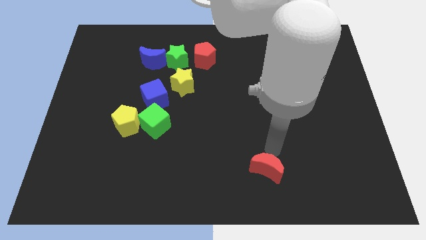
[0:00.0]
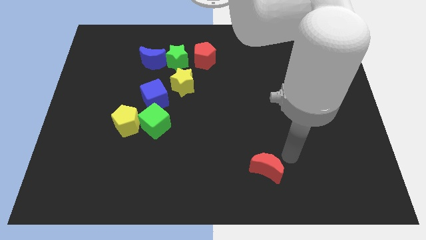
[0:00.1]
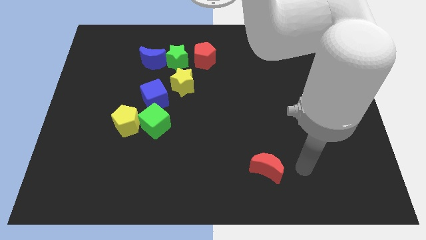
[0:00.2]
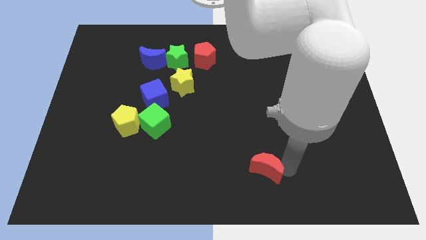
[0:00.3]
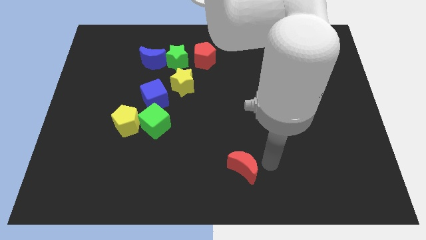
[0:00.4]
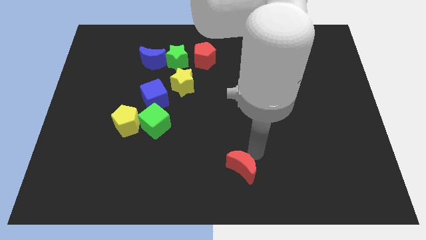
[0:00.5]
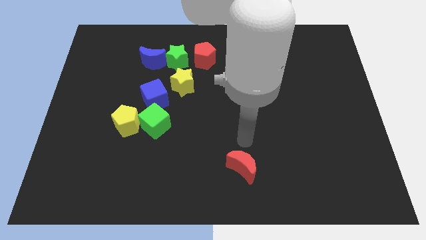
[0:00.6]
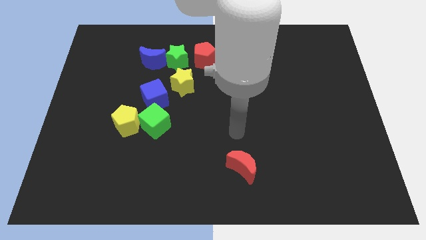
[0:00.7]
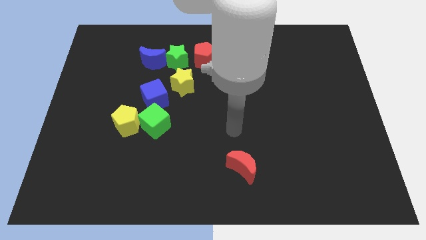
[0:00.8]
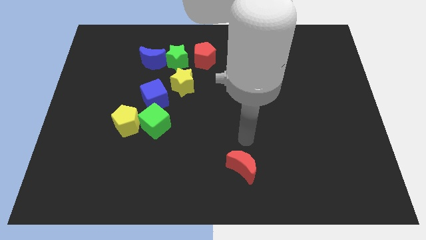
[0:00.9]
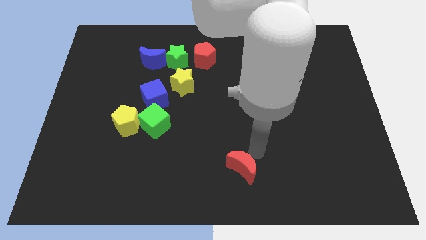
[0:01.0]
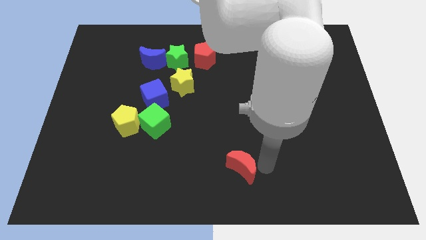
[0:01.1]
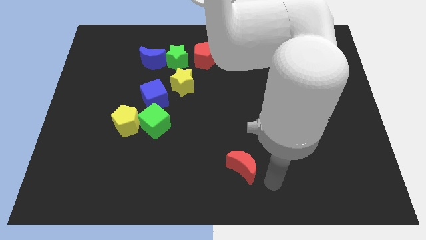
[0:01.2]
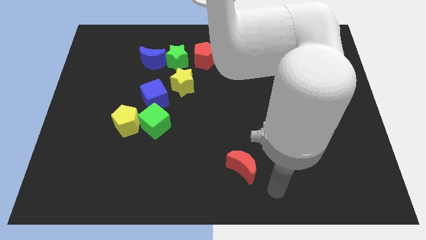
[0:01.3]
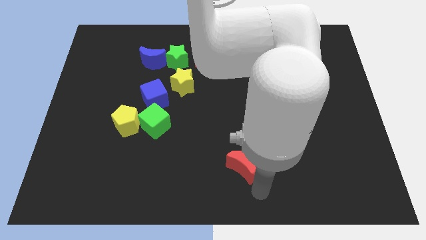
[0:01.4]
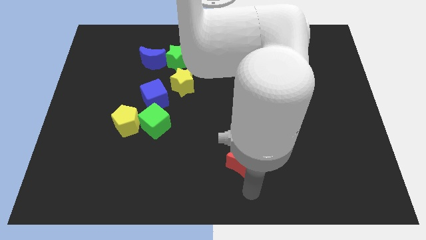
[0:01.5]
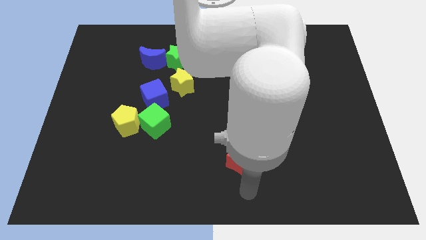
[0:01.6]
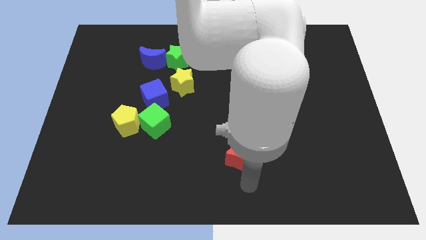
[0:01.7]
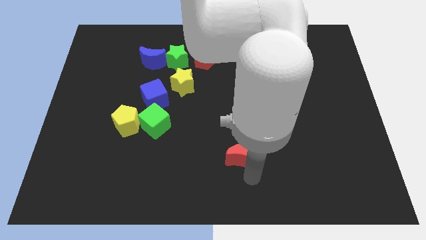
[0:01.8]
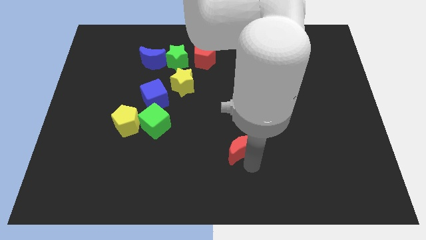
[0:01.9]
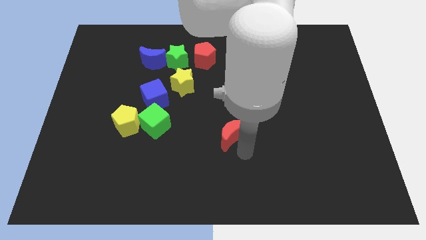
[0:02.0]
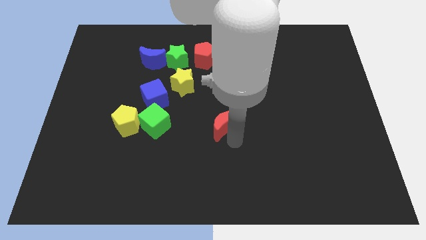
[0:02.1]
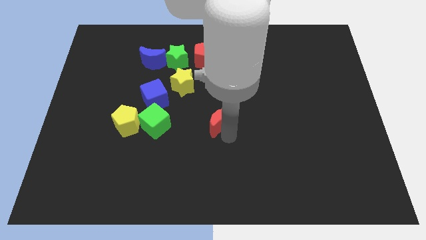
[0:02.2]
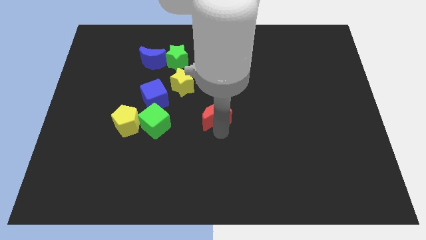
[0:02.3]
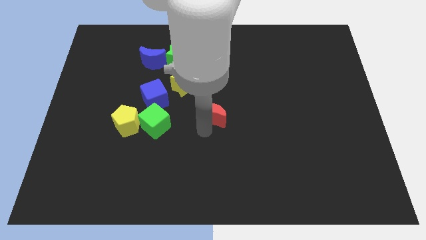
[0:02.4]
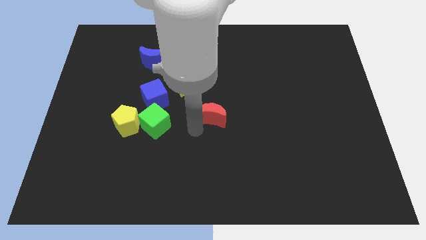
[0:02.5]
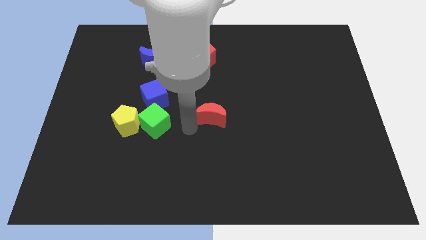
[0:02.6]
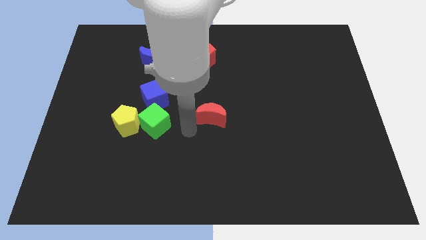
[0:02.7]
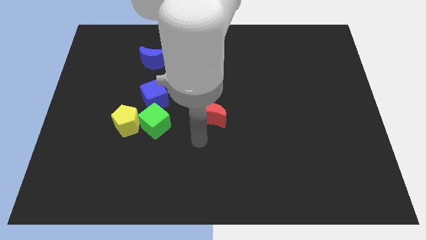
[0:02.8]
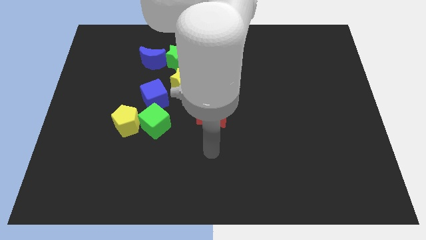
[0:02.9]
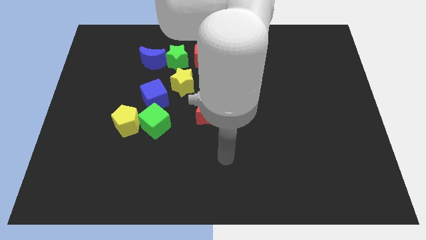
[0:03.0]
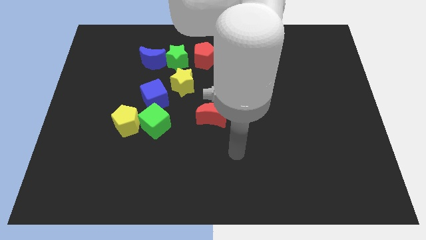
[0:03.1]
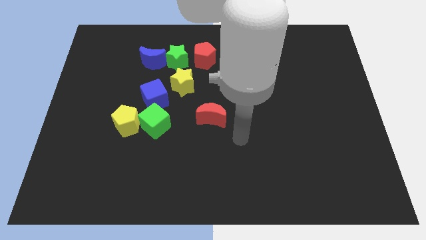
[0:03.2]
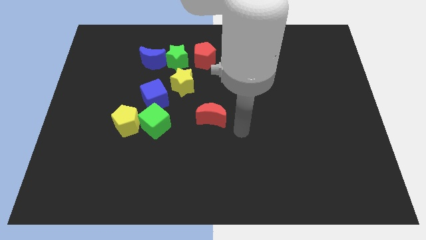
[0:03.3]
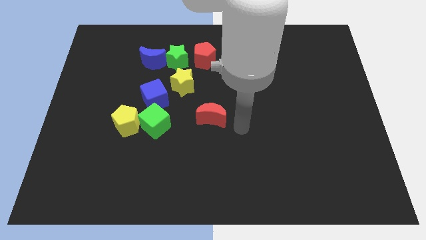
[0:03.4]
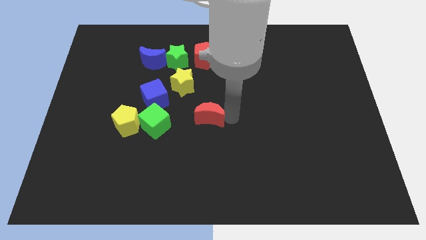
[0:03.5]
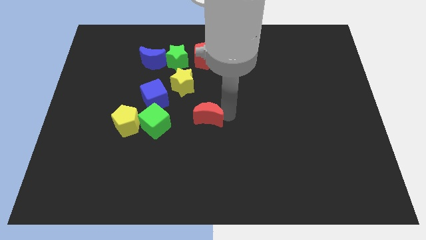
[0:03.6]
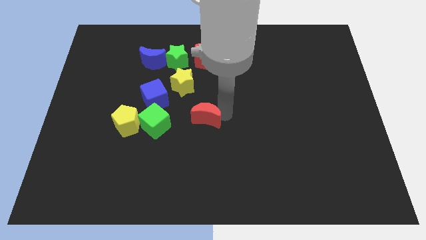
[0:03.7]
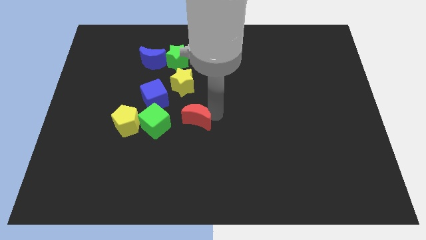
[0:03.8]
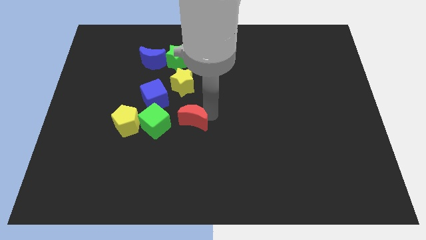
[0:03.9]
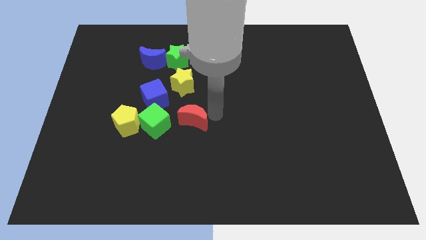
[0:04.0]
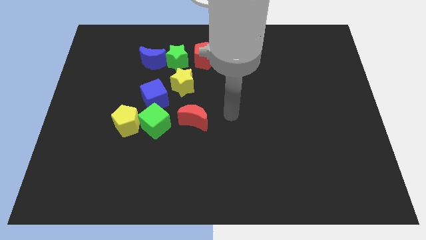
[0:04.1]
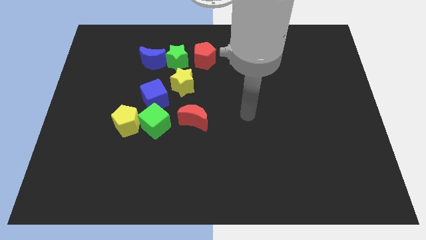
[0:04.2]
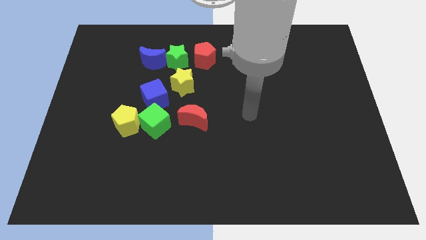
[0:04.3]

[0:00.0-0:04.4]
slide the red moon close to the green cube

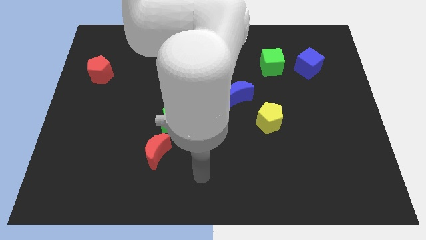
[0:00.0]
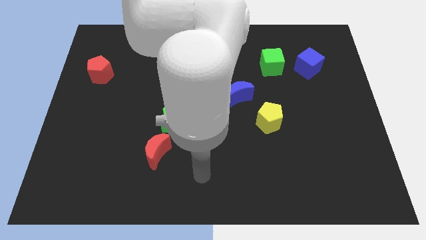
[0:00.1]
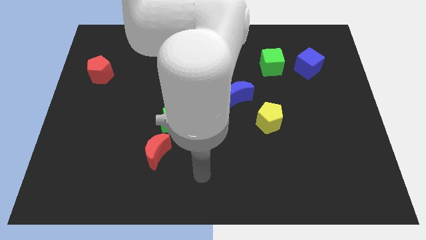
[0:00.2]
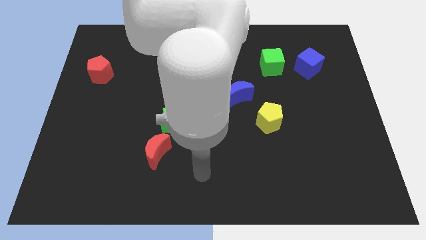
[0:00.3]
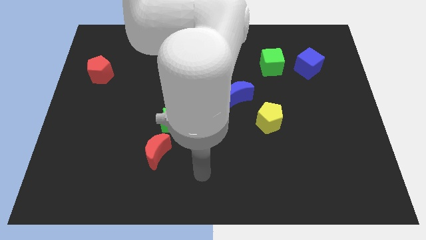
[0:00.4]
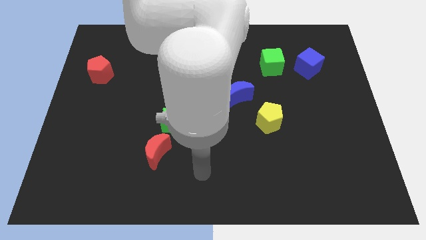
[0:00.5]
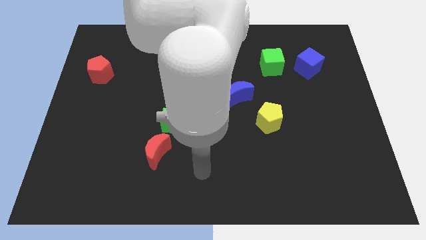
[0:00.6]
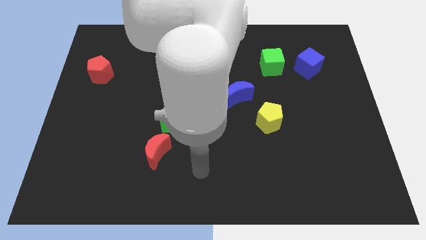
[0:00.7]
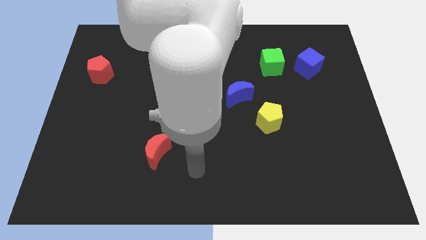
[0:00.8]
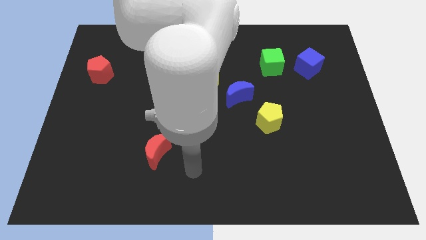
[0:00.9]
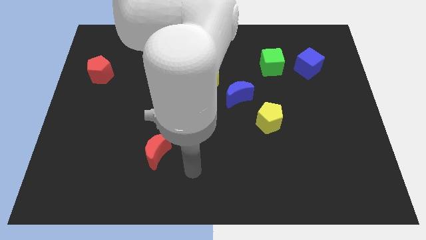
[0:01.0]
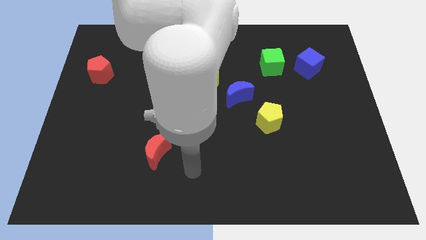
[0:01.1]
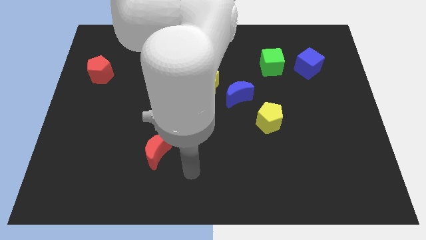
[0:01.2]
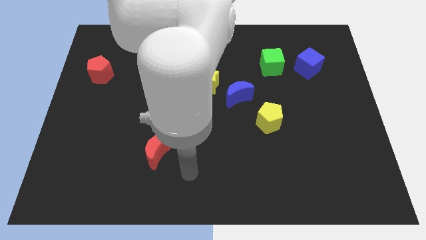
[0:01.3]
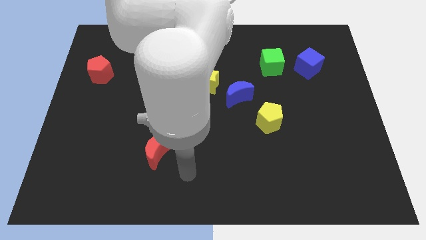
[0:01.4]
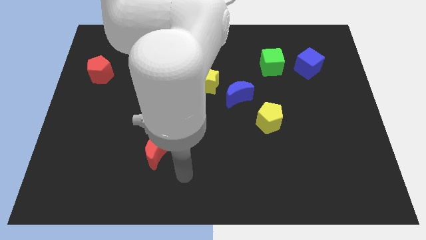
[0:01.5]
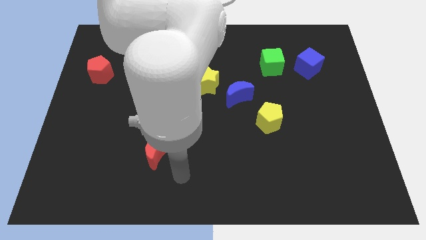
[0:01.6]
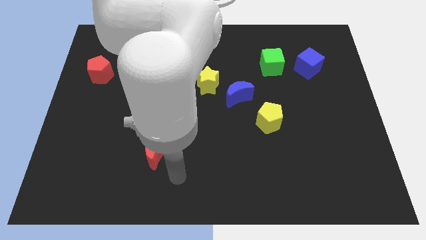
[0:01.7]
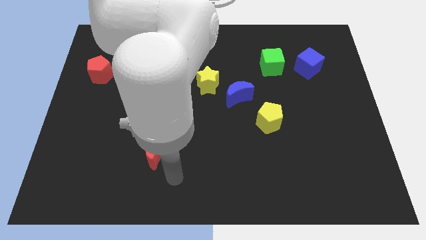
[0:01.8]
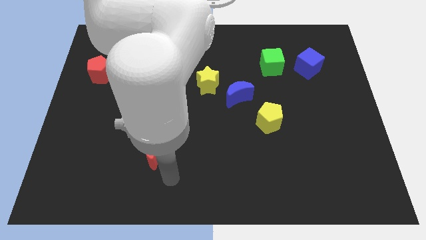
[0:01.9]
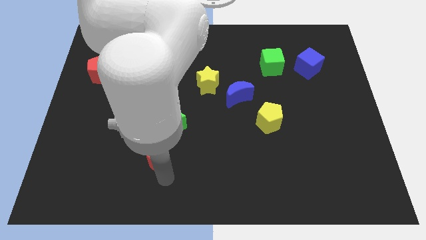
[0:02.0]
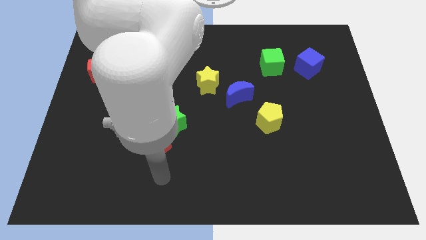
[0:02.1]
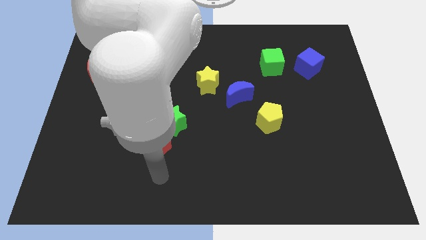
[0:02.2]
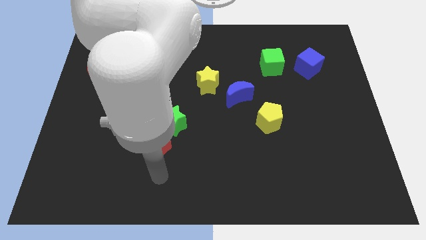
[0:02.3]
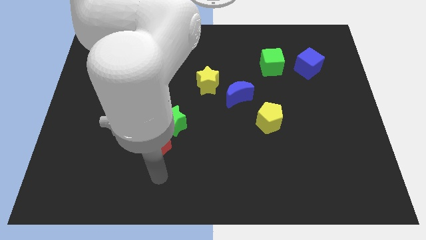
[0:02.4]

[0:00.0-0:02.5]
move the arm close to the bottom of the red crescent

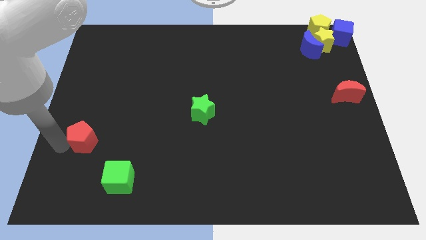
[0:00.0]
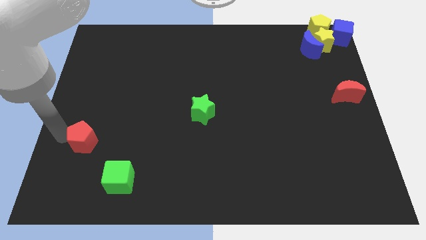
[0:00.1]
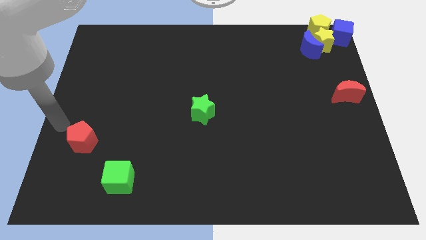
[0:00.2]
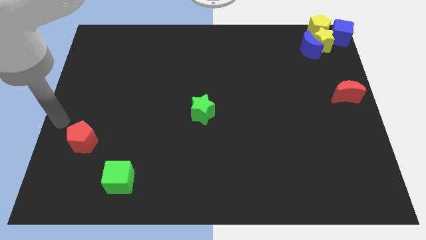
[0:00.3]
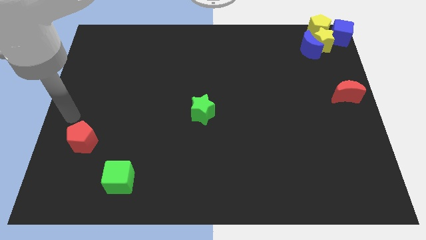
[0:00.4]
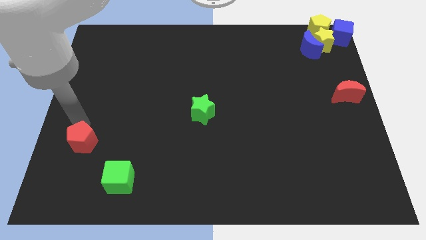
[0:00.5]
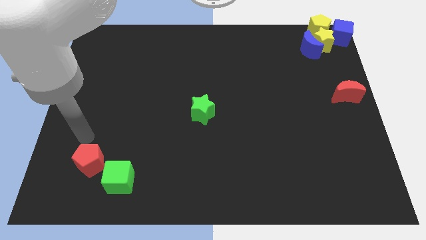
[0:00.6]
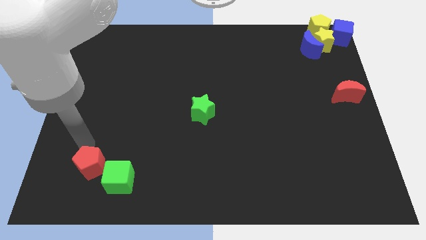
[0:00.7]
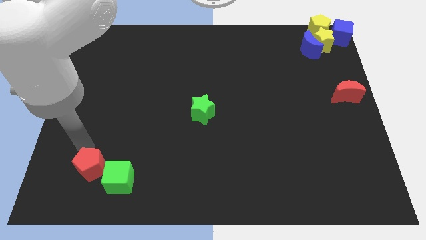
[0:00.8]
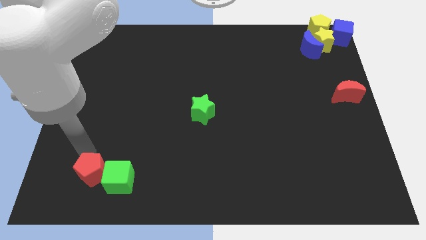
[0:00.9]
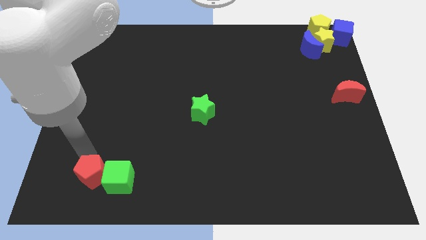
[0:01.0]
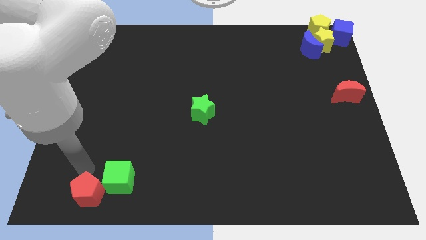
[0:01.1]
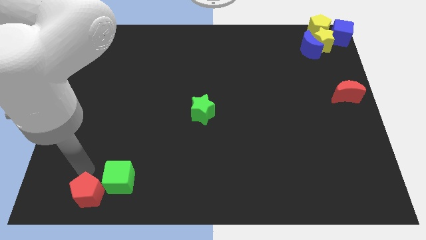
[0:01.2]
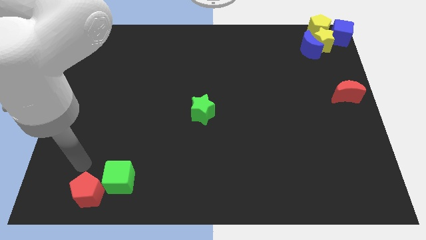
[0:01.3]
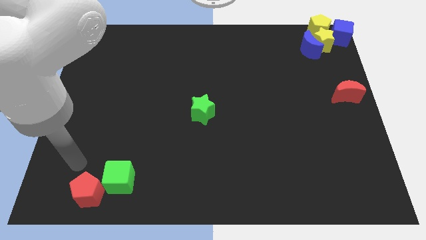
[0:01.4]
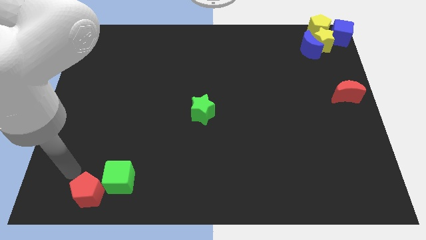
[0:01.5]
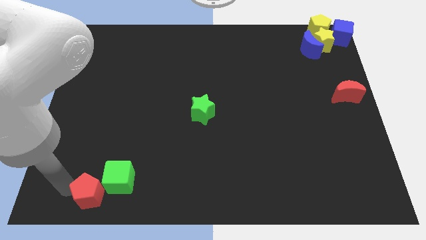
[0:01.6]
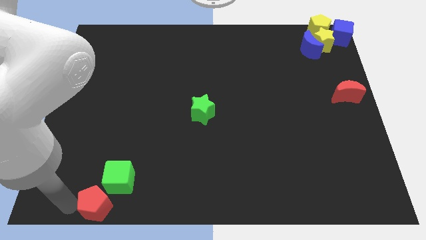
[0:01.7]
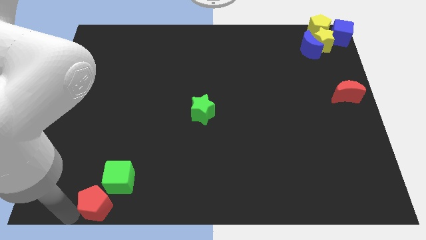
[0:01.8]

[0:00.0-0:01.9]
push the red pentagon to the bottom of the board

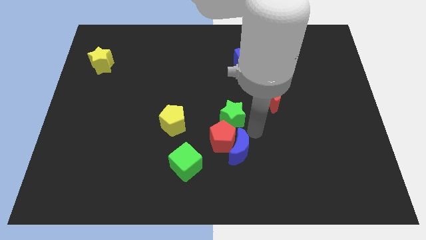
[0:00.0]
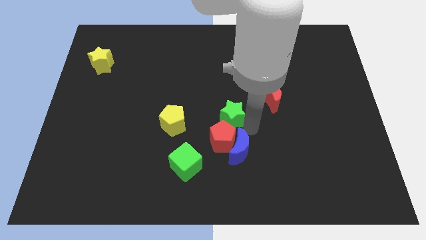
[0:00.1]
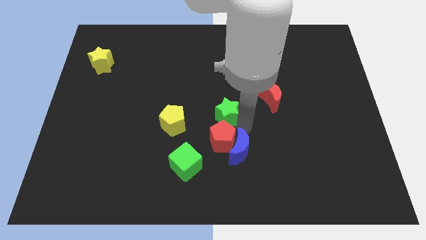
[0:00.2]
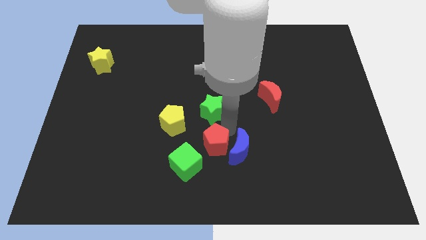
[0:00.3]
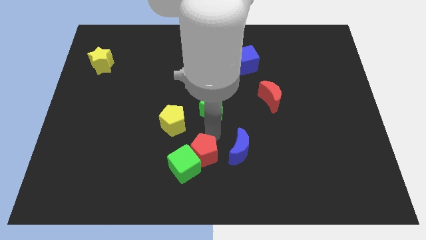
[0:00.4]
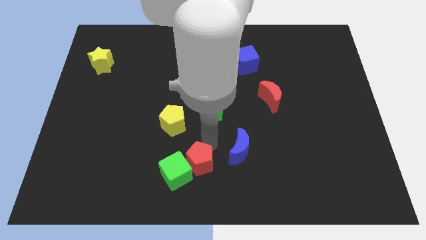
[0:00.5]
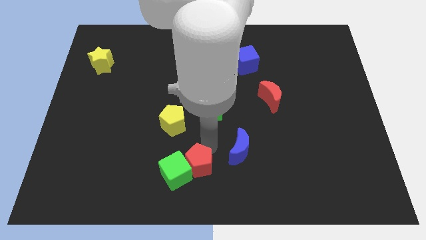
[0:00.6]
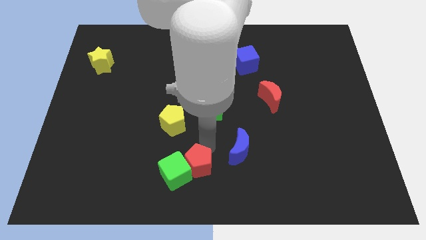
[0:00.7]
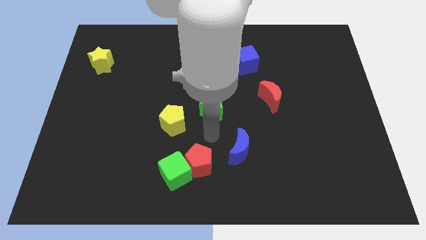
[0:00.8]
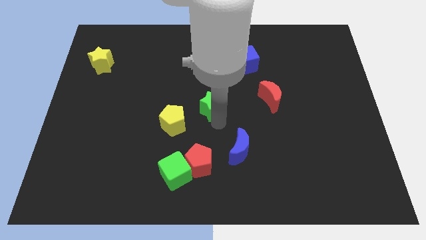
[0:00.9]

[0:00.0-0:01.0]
push red pentagon into green cube
